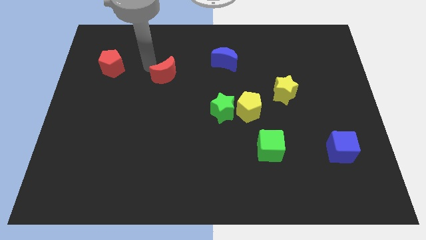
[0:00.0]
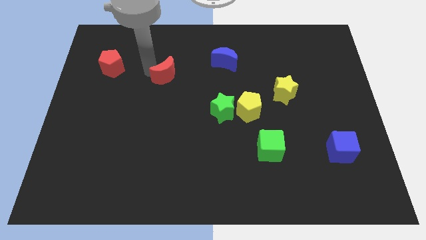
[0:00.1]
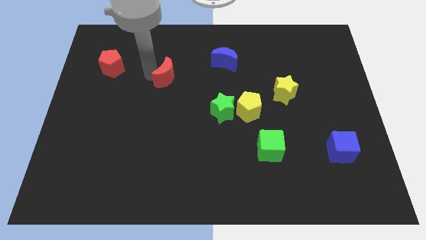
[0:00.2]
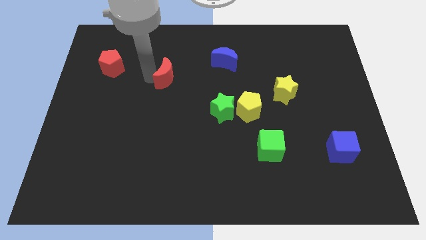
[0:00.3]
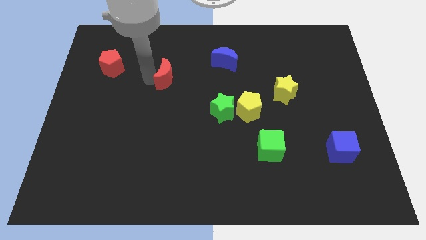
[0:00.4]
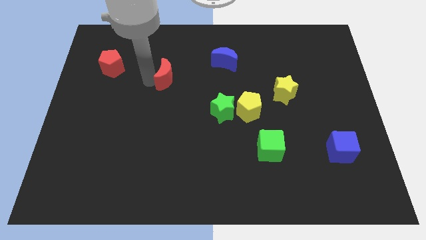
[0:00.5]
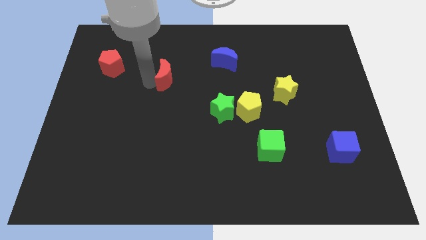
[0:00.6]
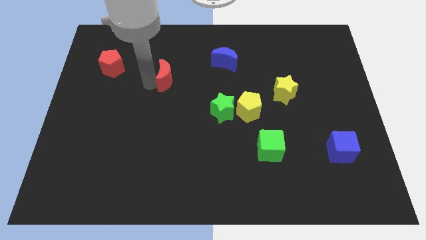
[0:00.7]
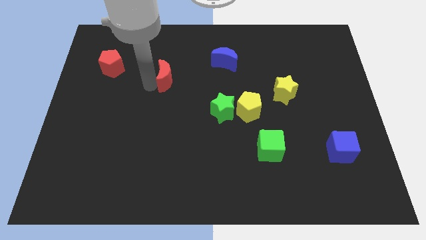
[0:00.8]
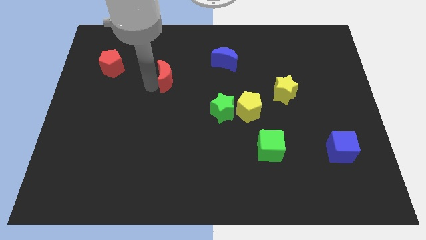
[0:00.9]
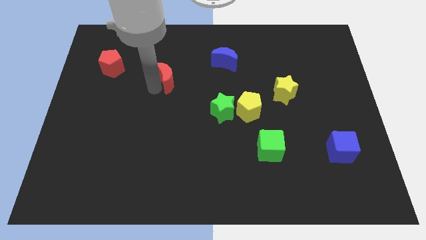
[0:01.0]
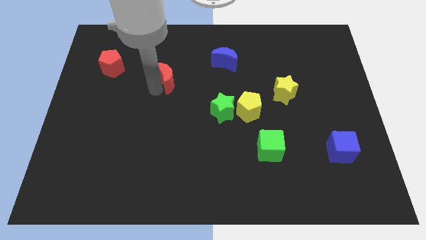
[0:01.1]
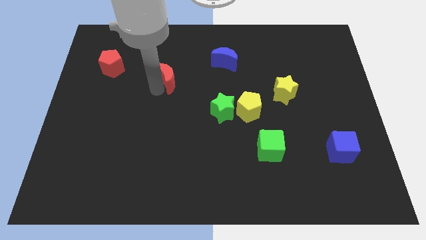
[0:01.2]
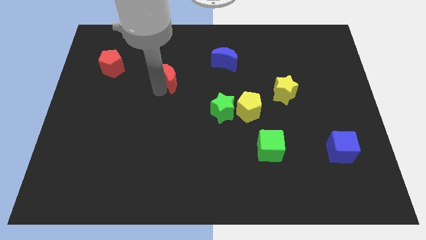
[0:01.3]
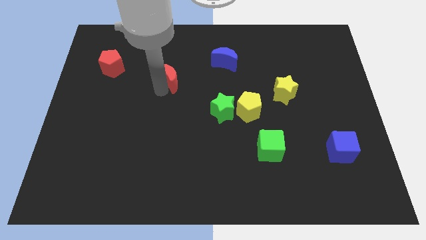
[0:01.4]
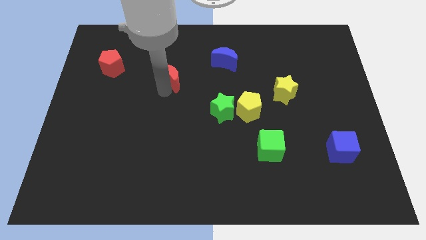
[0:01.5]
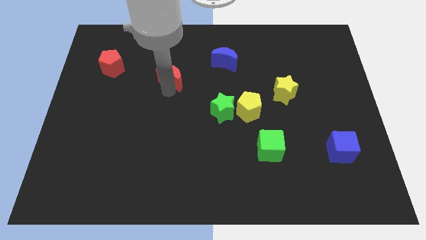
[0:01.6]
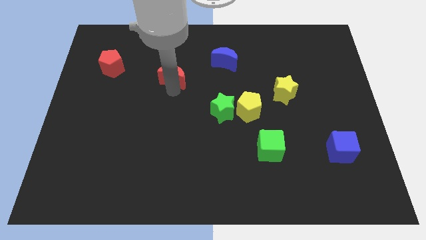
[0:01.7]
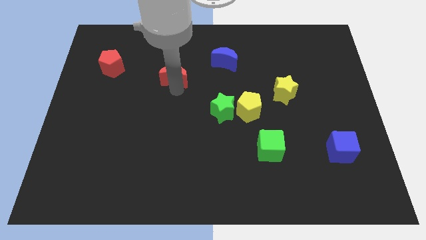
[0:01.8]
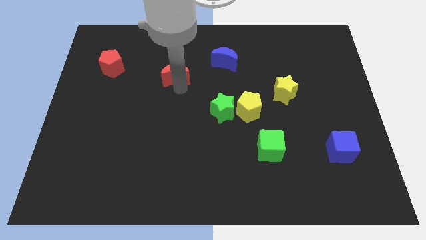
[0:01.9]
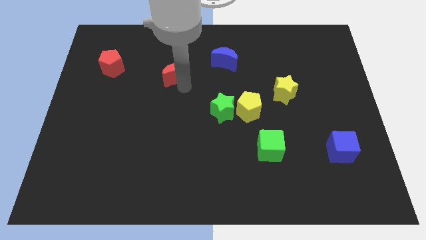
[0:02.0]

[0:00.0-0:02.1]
push the red crescent slightly

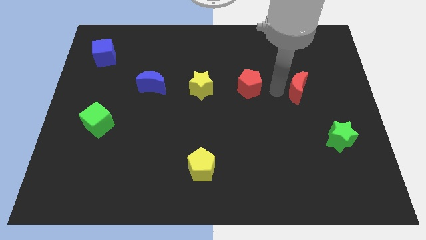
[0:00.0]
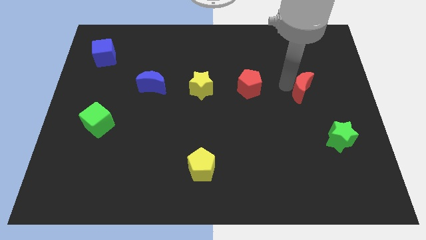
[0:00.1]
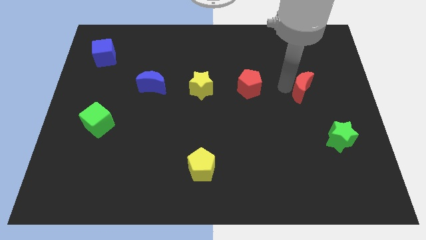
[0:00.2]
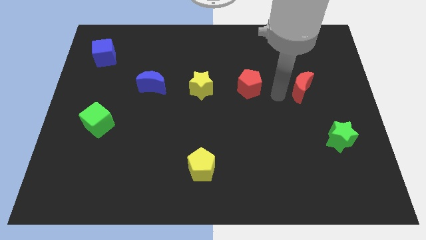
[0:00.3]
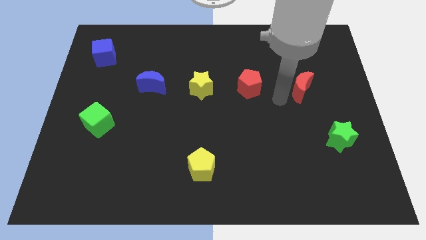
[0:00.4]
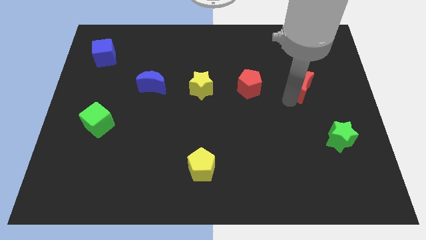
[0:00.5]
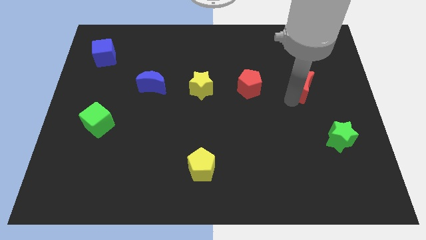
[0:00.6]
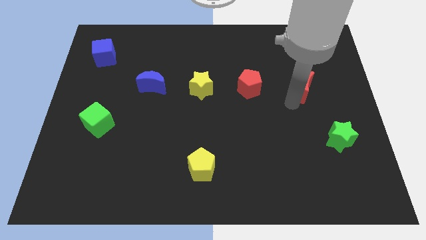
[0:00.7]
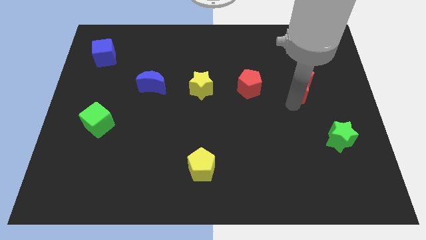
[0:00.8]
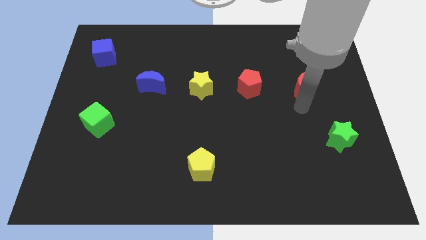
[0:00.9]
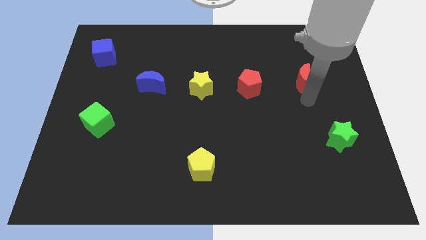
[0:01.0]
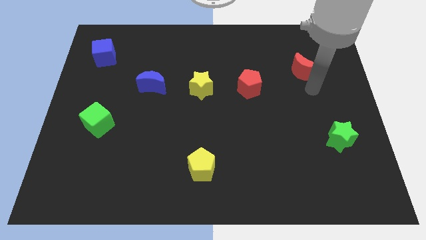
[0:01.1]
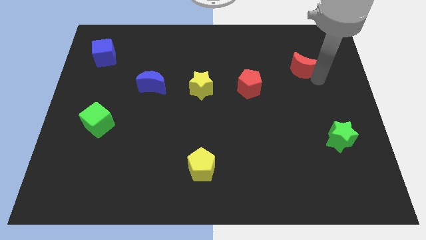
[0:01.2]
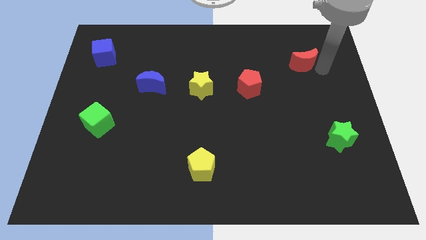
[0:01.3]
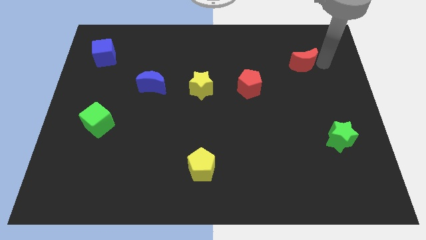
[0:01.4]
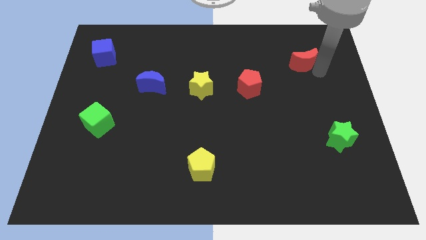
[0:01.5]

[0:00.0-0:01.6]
move red moon upwards

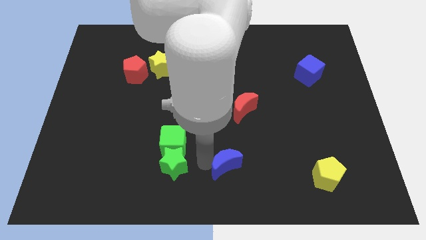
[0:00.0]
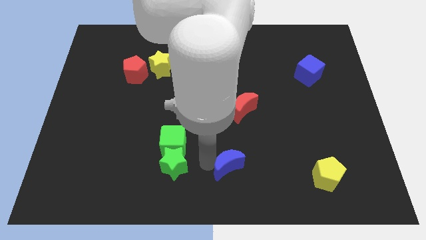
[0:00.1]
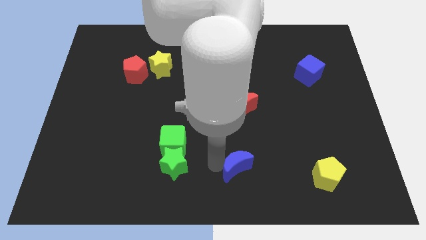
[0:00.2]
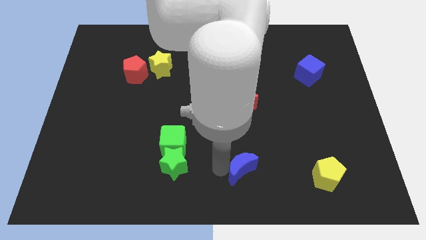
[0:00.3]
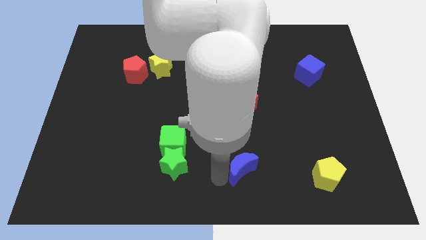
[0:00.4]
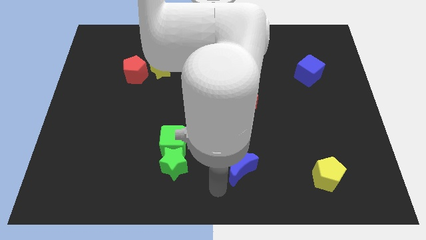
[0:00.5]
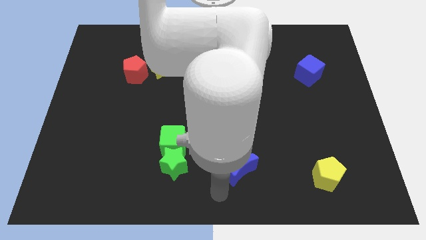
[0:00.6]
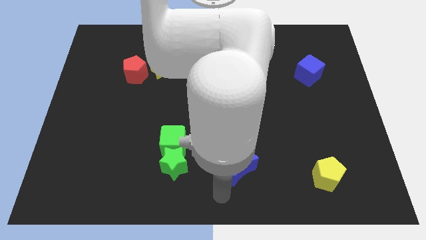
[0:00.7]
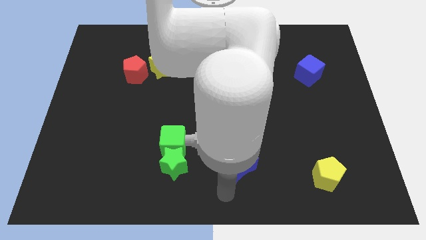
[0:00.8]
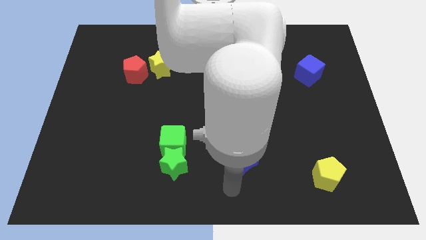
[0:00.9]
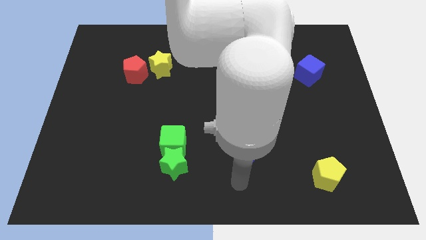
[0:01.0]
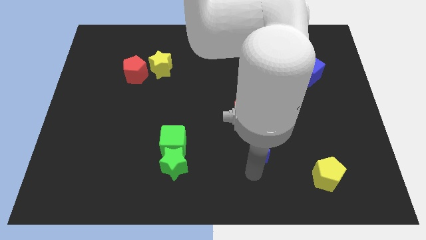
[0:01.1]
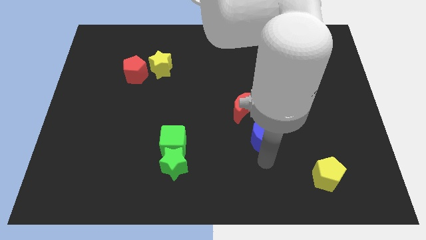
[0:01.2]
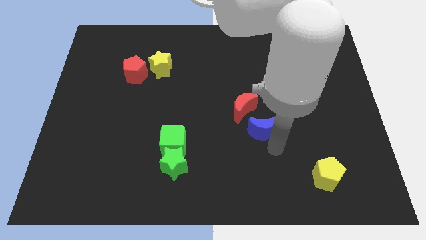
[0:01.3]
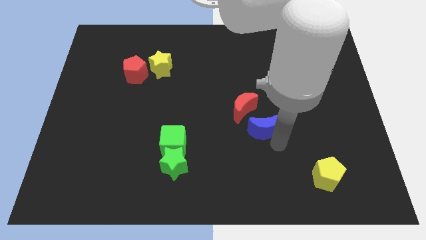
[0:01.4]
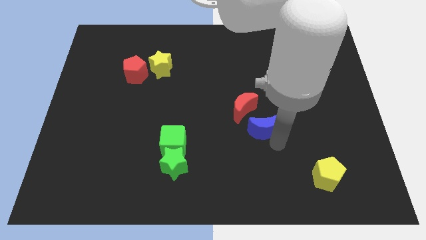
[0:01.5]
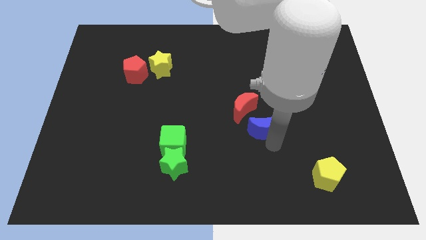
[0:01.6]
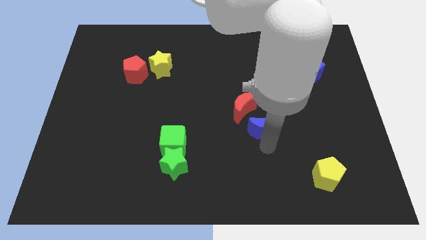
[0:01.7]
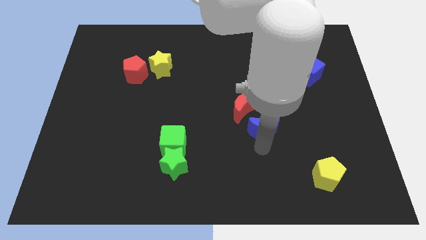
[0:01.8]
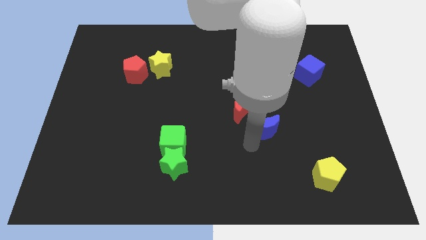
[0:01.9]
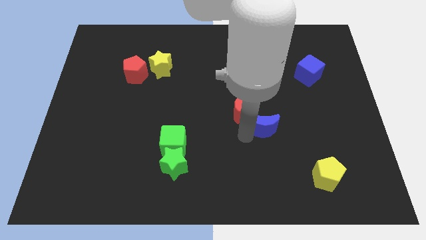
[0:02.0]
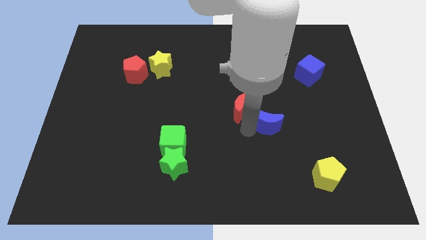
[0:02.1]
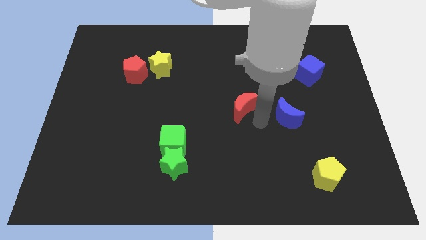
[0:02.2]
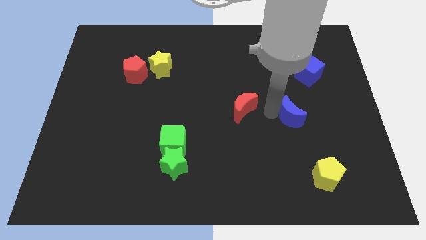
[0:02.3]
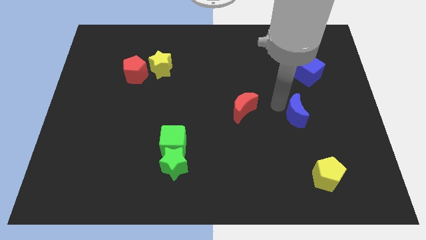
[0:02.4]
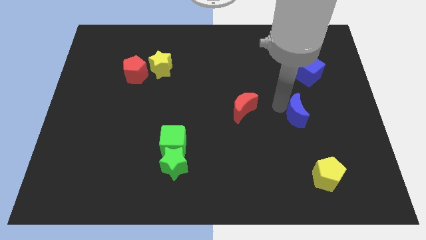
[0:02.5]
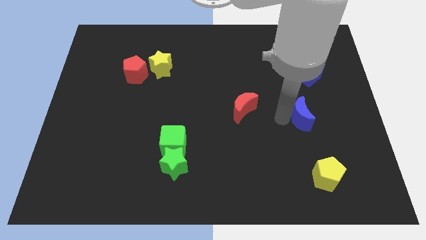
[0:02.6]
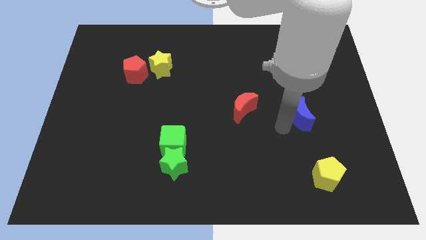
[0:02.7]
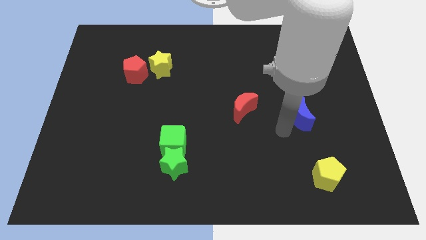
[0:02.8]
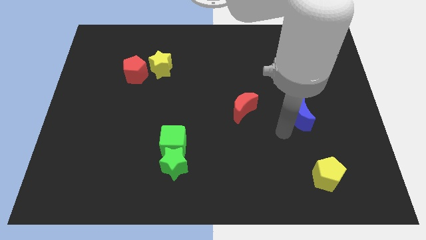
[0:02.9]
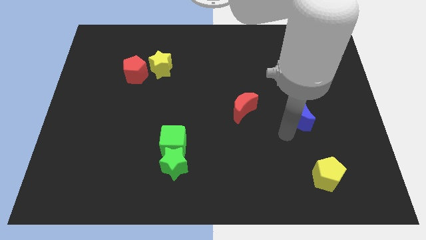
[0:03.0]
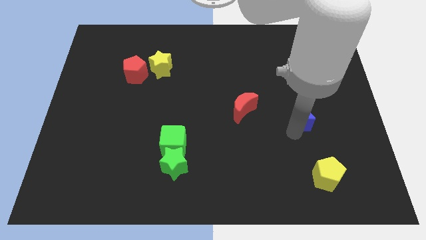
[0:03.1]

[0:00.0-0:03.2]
push the blue crescent towards the blue cube

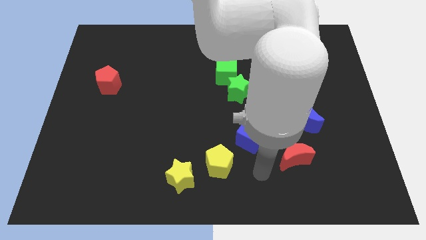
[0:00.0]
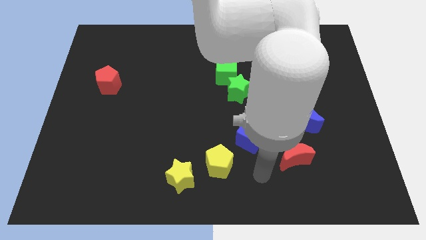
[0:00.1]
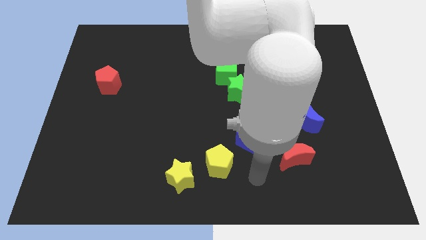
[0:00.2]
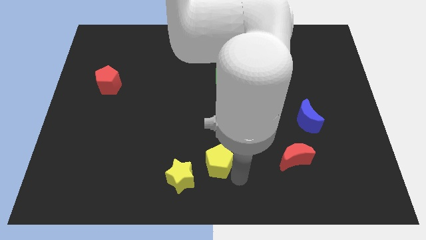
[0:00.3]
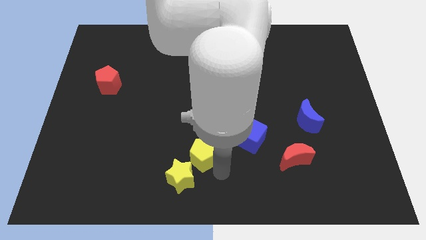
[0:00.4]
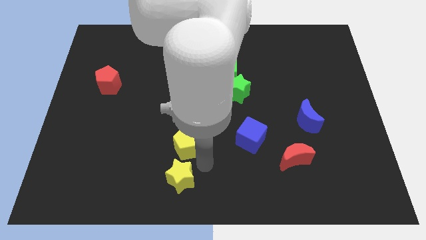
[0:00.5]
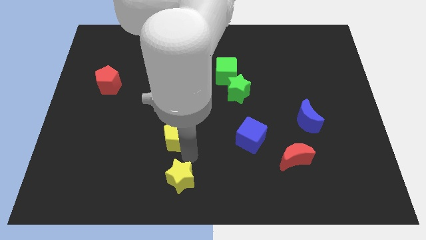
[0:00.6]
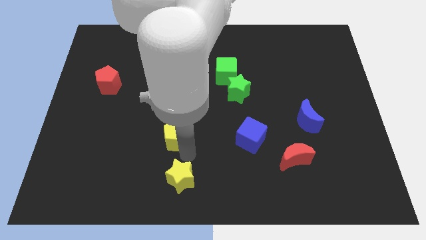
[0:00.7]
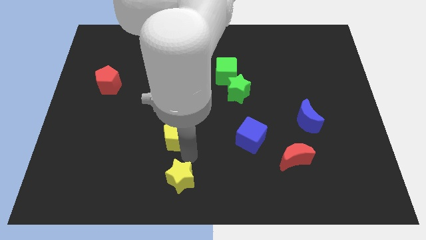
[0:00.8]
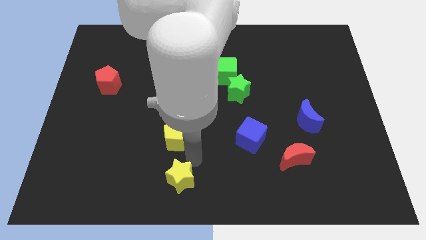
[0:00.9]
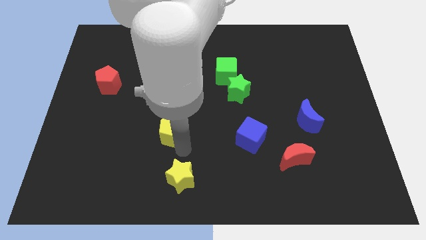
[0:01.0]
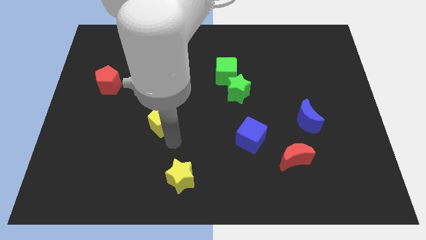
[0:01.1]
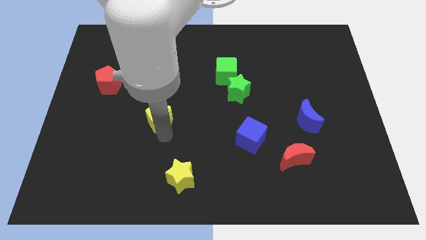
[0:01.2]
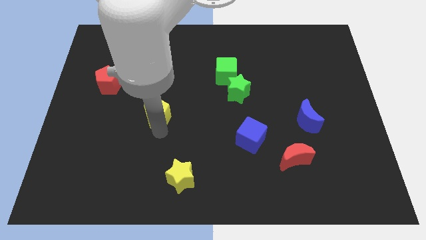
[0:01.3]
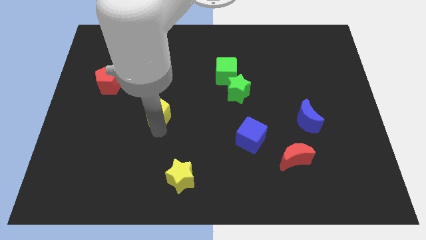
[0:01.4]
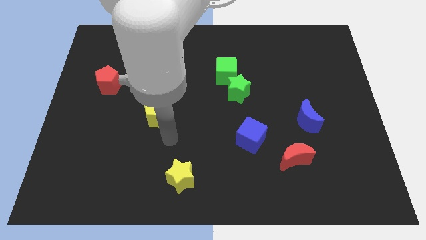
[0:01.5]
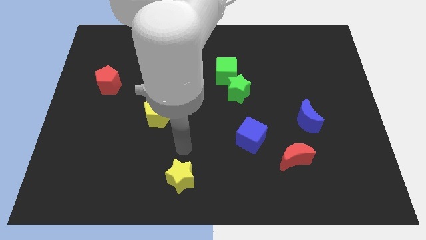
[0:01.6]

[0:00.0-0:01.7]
push the yellow pentagon away from the blue cube

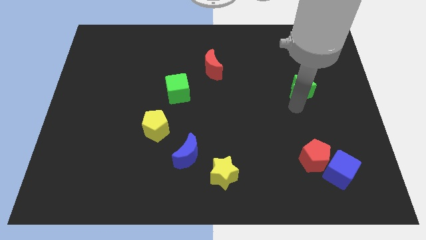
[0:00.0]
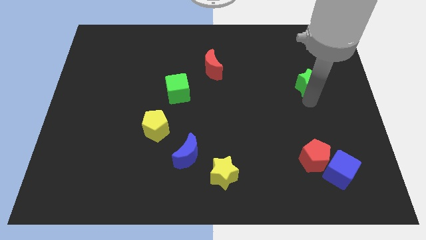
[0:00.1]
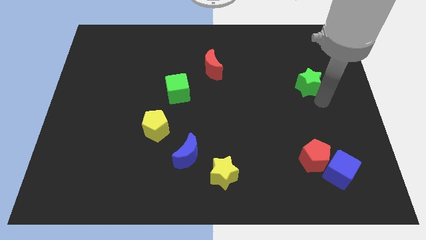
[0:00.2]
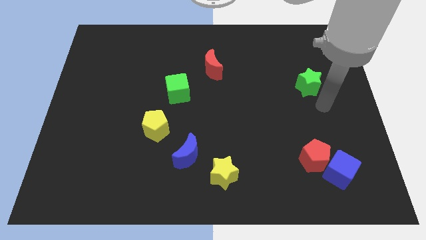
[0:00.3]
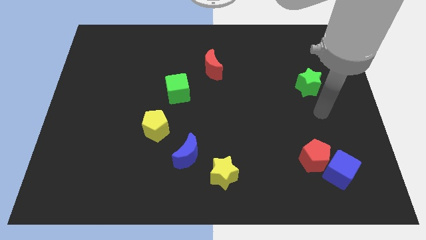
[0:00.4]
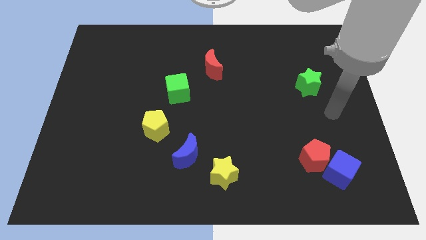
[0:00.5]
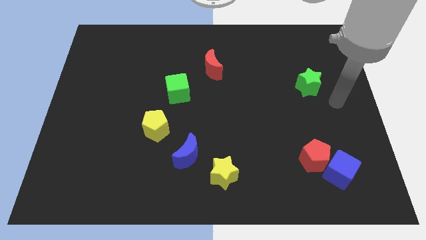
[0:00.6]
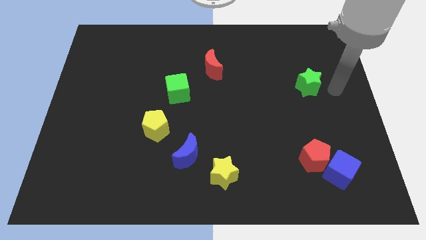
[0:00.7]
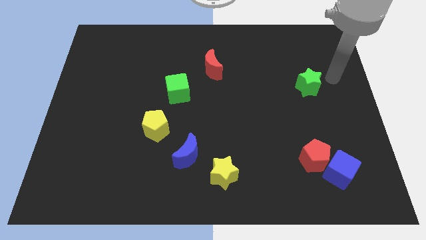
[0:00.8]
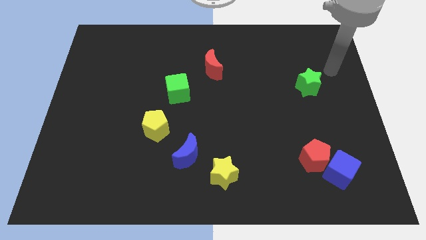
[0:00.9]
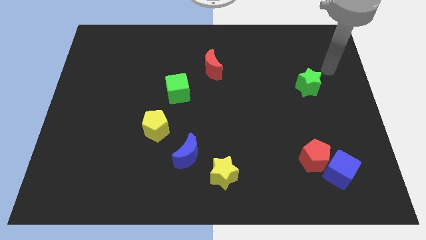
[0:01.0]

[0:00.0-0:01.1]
put the green star vertically above the red pentagon
